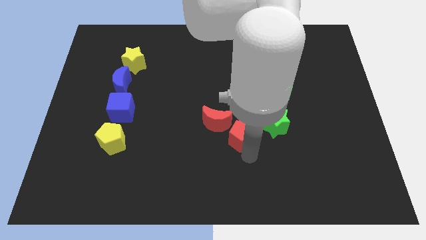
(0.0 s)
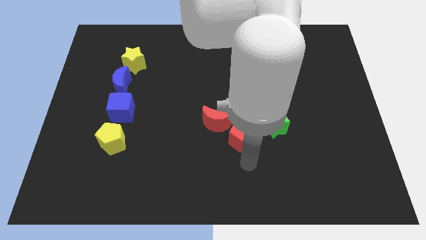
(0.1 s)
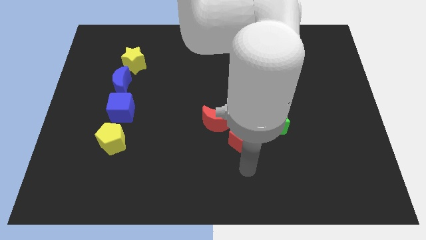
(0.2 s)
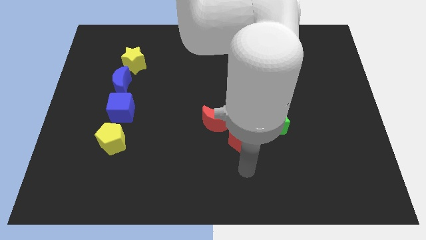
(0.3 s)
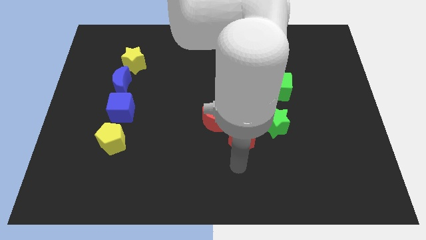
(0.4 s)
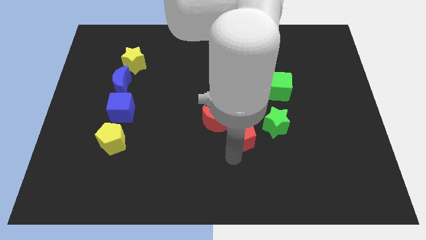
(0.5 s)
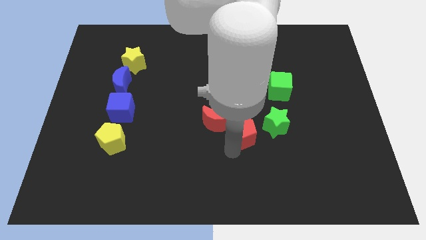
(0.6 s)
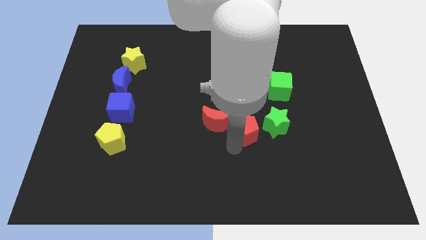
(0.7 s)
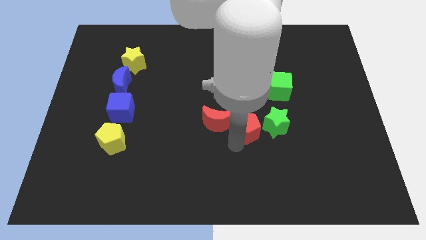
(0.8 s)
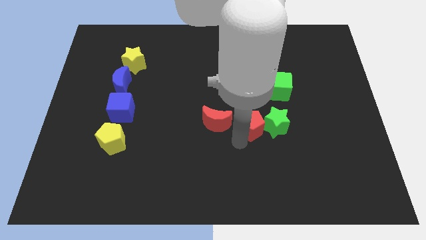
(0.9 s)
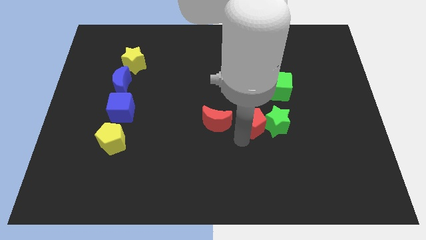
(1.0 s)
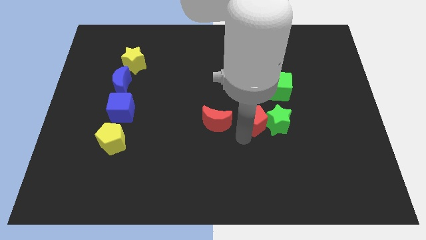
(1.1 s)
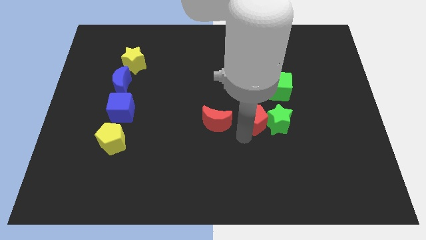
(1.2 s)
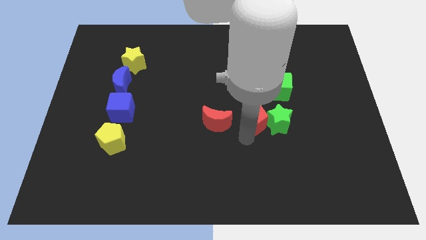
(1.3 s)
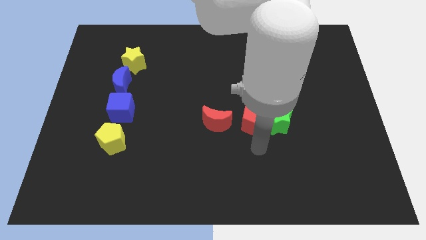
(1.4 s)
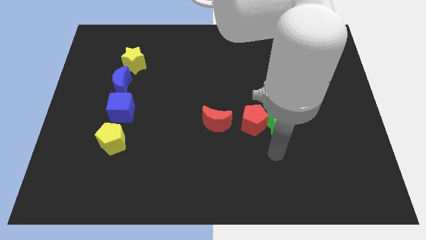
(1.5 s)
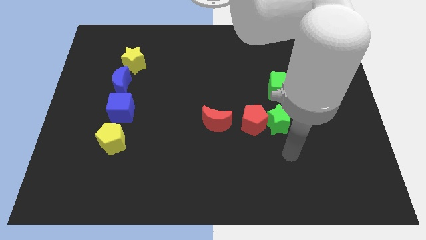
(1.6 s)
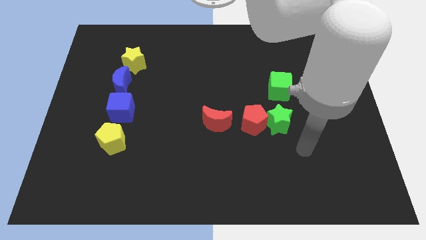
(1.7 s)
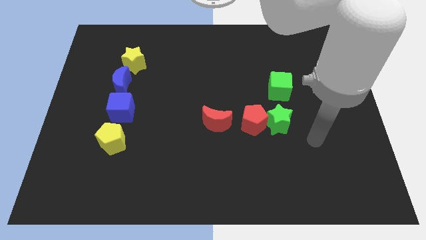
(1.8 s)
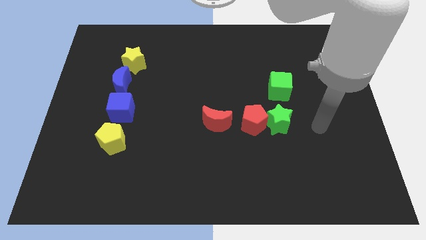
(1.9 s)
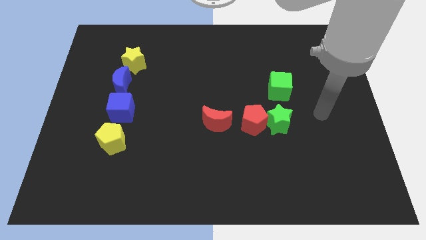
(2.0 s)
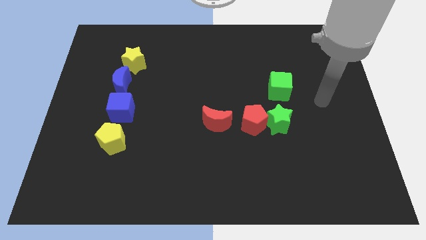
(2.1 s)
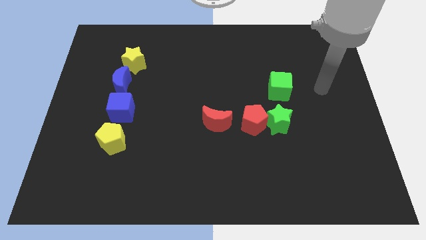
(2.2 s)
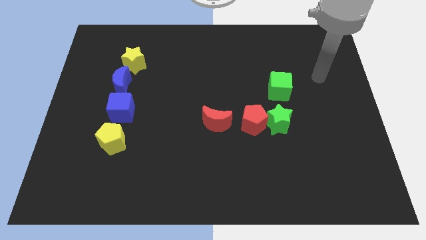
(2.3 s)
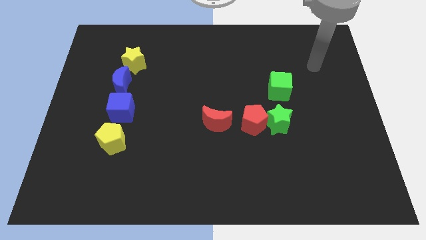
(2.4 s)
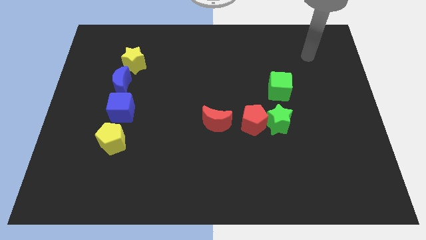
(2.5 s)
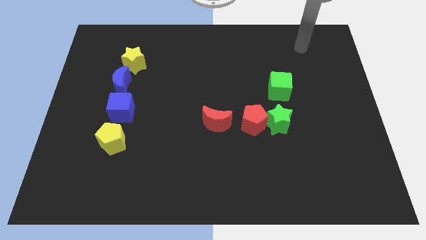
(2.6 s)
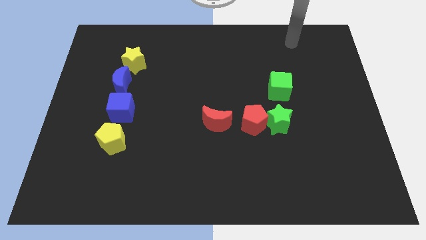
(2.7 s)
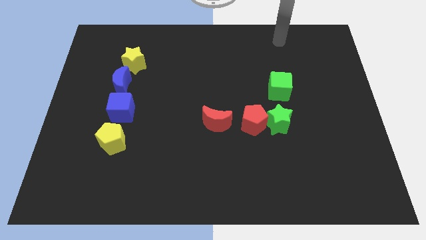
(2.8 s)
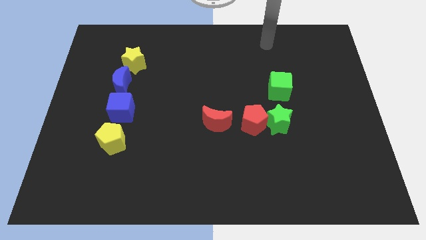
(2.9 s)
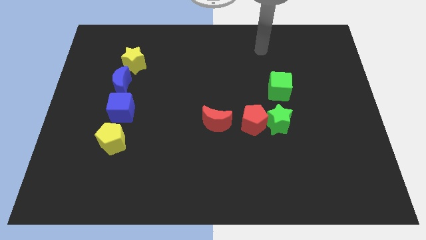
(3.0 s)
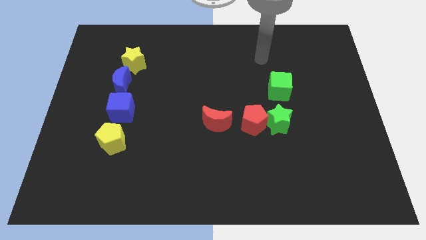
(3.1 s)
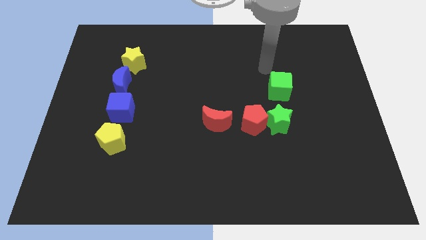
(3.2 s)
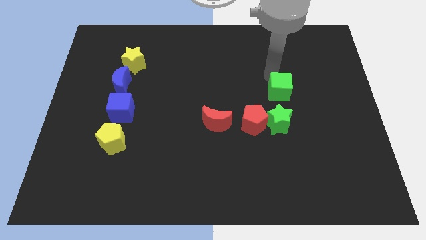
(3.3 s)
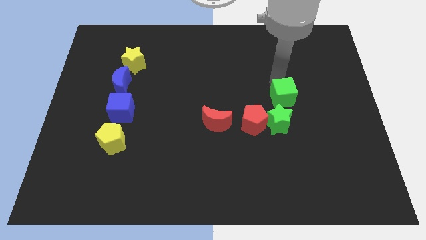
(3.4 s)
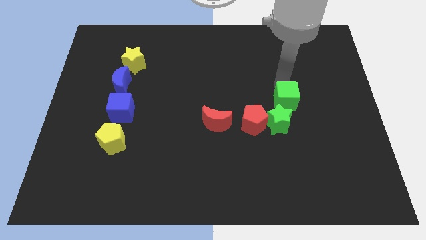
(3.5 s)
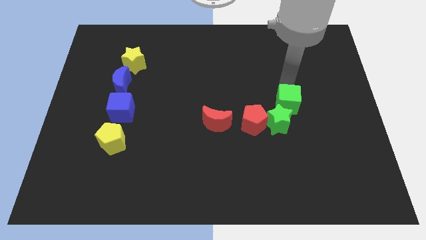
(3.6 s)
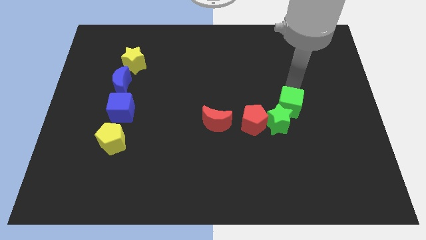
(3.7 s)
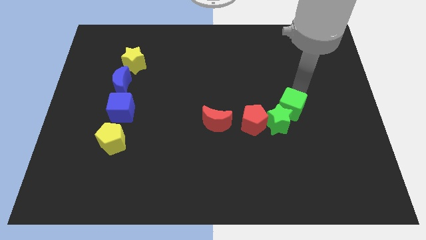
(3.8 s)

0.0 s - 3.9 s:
push green cube close to green star

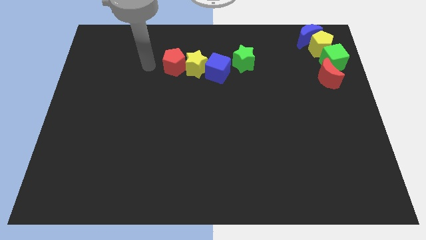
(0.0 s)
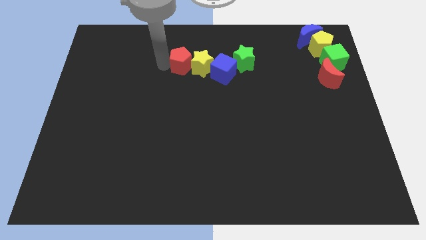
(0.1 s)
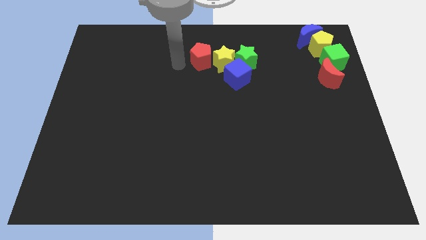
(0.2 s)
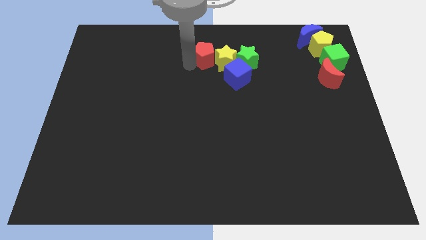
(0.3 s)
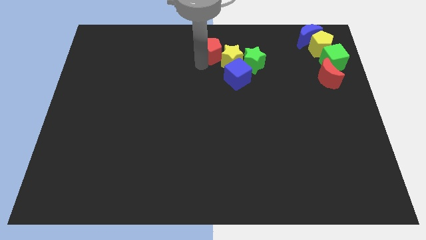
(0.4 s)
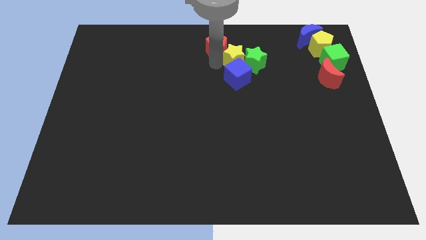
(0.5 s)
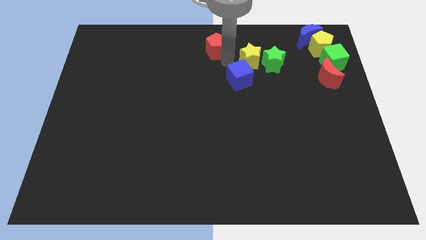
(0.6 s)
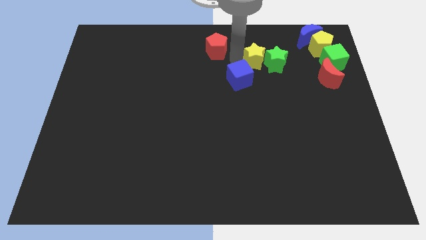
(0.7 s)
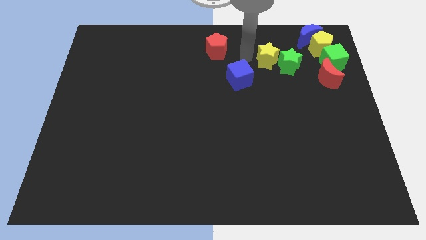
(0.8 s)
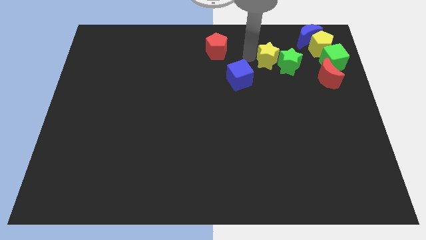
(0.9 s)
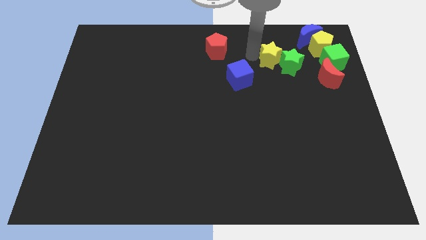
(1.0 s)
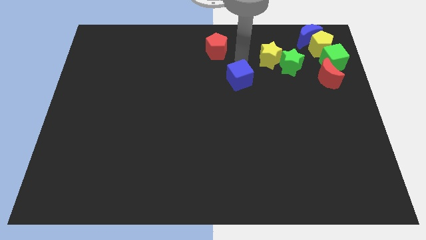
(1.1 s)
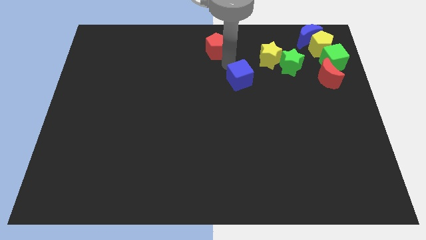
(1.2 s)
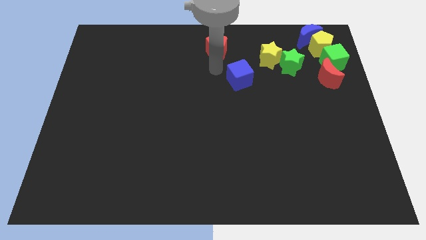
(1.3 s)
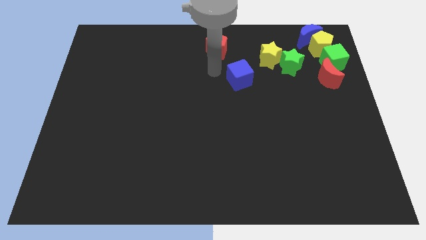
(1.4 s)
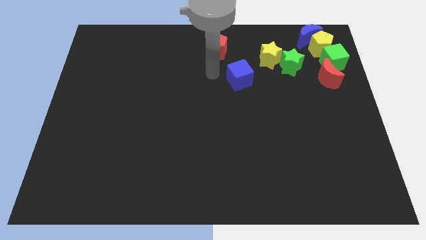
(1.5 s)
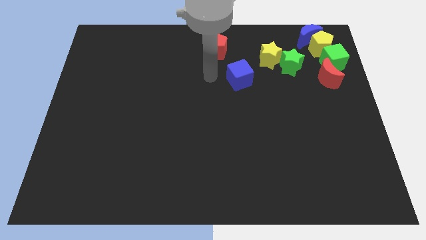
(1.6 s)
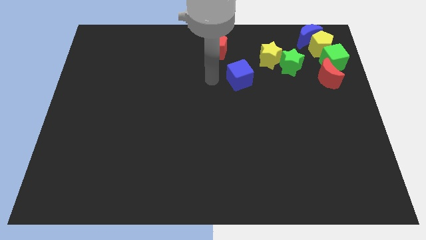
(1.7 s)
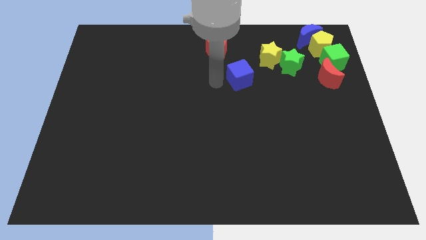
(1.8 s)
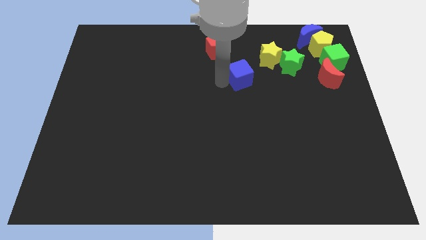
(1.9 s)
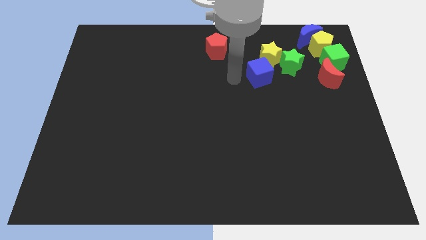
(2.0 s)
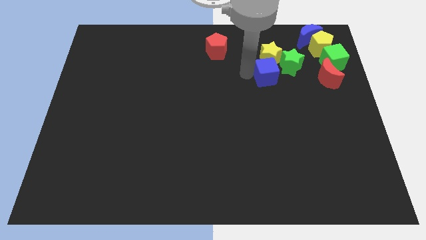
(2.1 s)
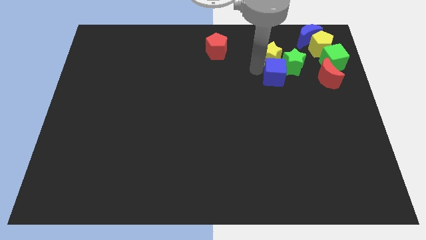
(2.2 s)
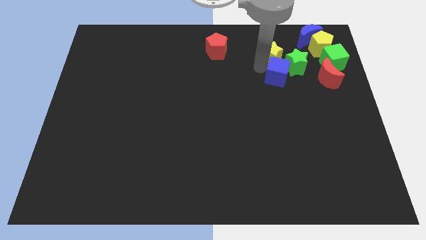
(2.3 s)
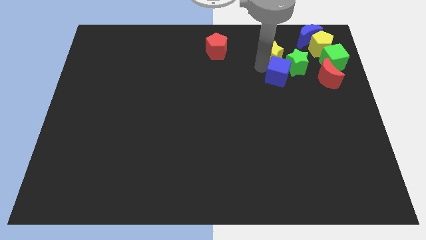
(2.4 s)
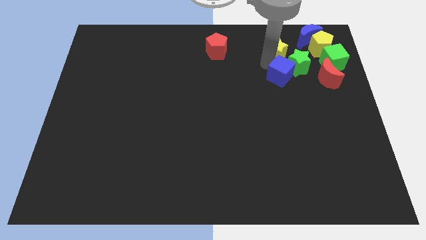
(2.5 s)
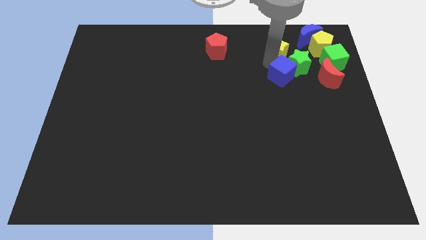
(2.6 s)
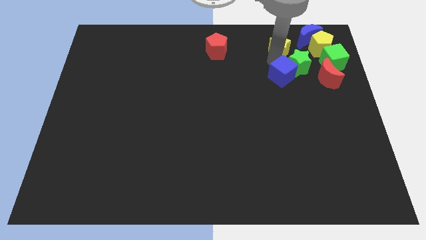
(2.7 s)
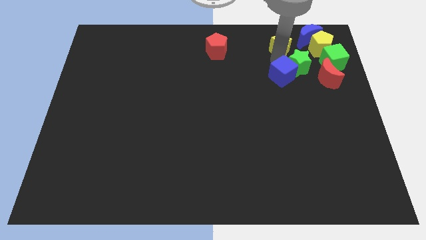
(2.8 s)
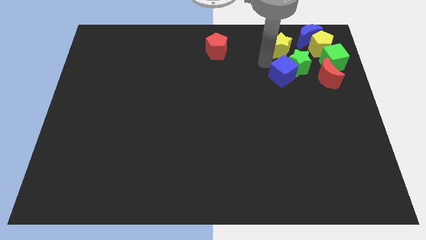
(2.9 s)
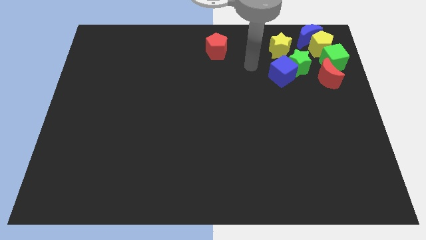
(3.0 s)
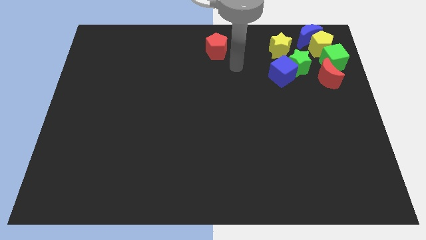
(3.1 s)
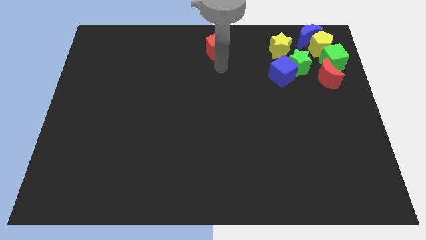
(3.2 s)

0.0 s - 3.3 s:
separate red pentagon and yellow star

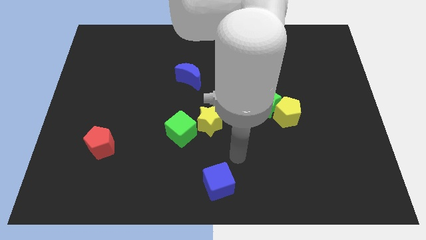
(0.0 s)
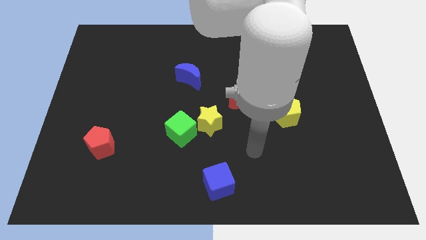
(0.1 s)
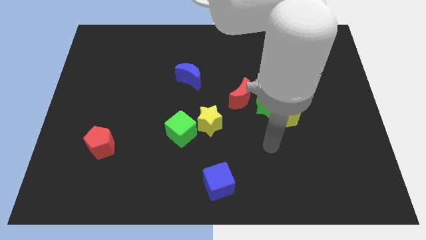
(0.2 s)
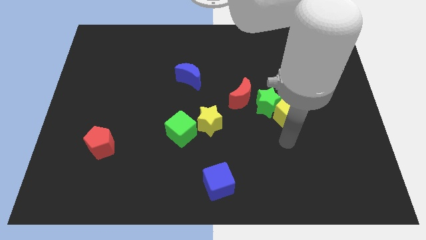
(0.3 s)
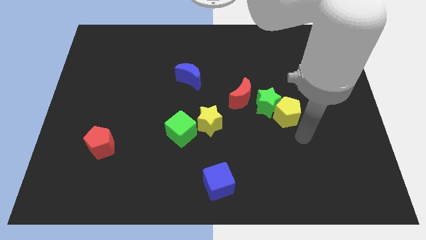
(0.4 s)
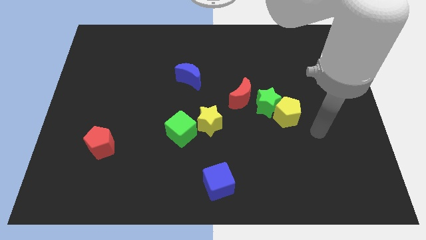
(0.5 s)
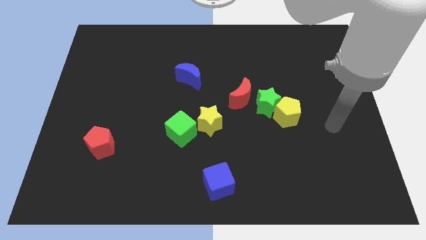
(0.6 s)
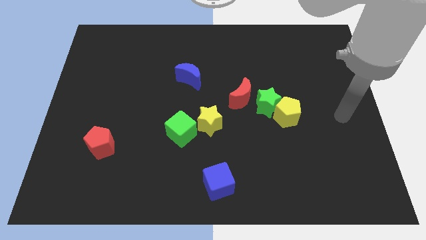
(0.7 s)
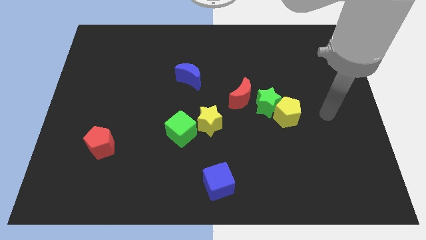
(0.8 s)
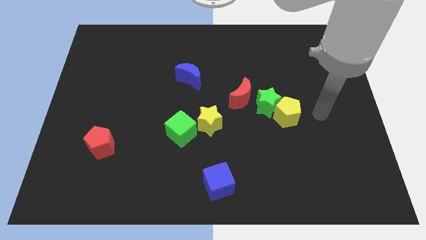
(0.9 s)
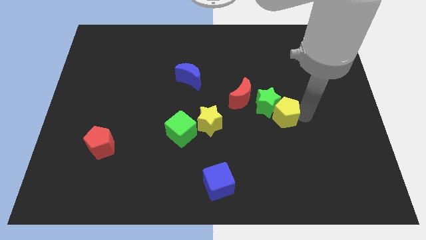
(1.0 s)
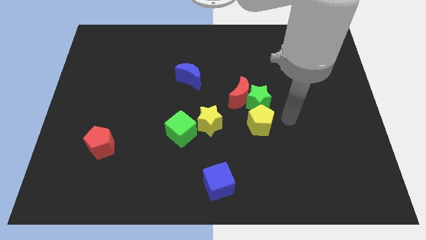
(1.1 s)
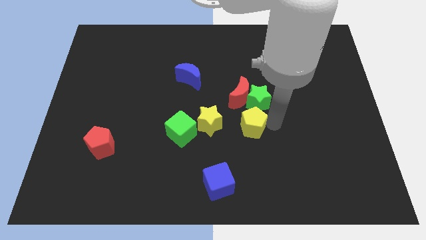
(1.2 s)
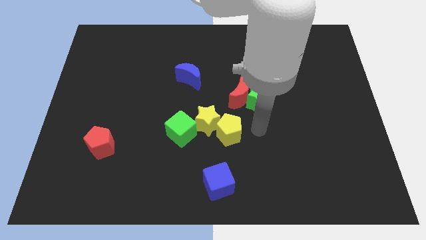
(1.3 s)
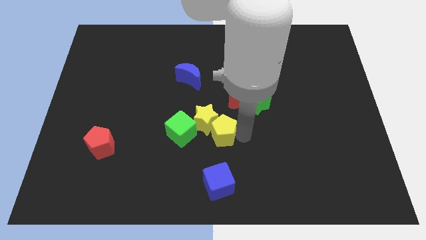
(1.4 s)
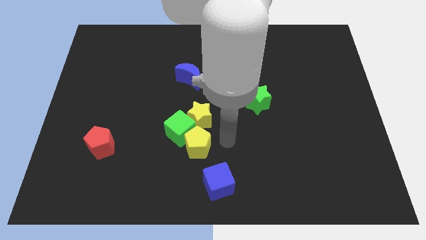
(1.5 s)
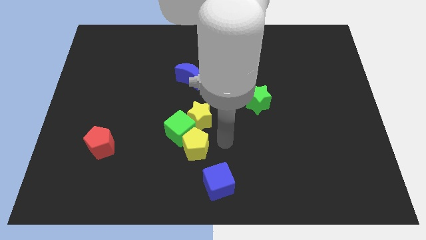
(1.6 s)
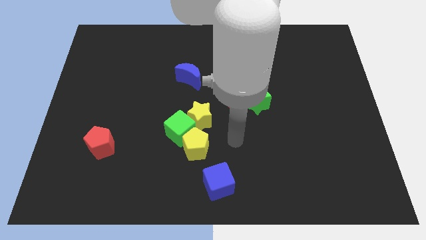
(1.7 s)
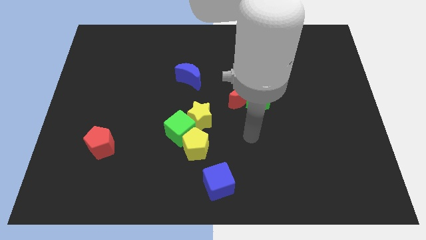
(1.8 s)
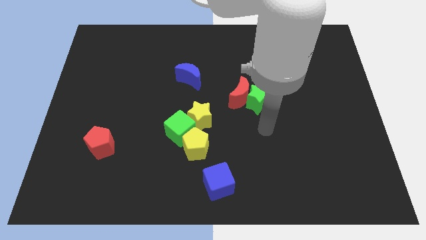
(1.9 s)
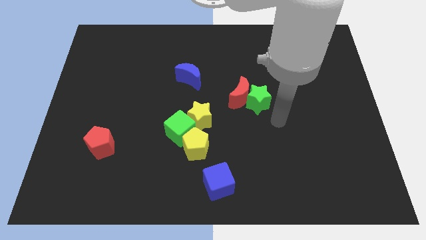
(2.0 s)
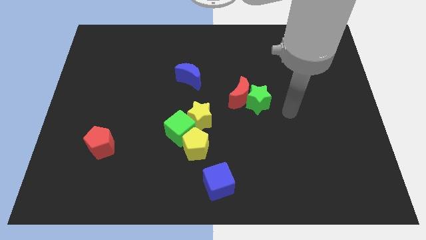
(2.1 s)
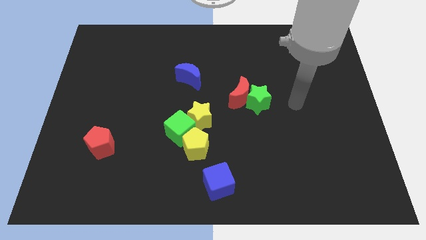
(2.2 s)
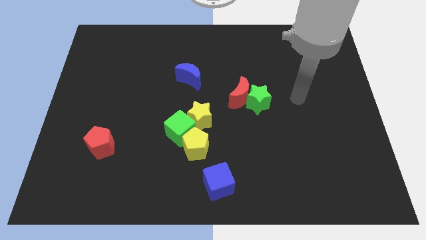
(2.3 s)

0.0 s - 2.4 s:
put the yellow pentagon in between the cubes
